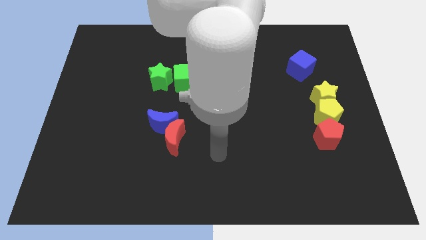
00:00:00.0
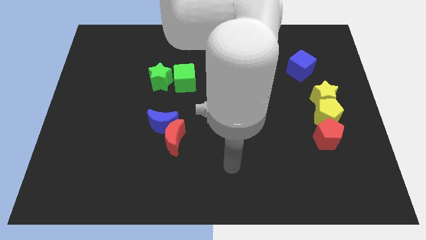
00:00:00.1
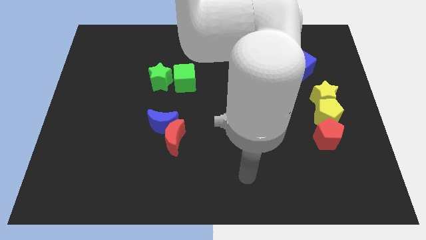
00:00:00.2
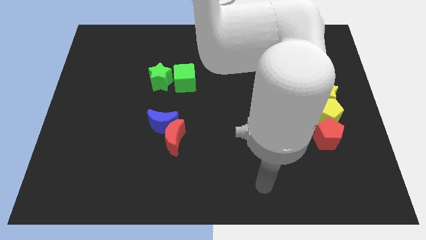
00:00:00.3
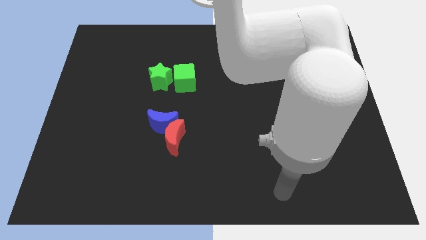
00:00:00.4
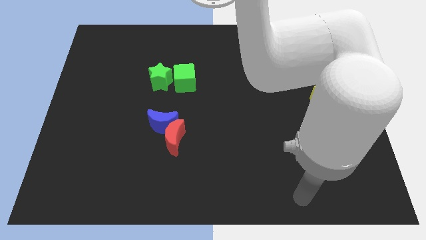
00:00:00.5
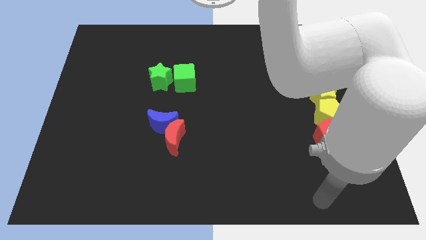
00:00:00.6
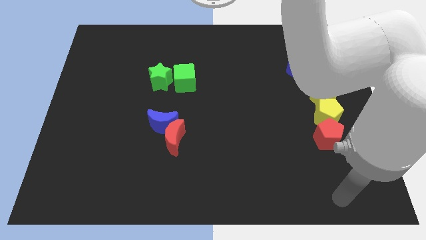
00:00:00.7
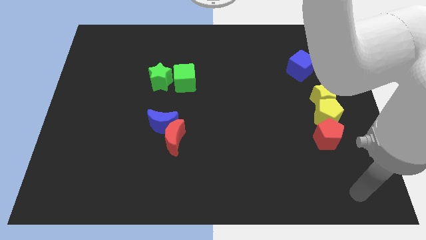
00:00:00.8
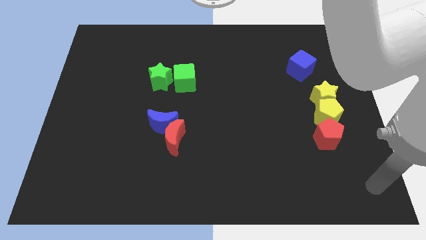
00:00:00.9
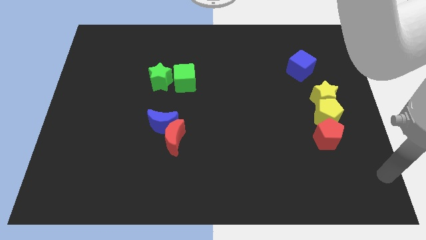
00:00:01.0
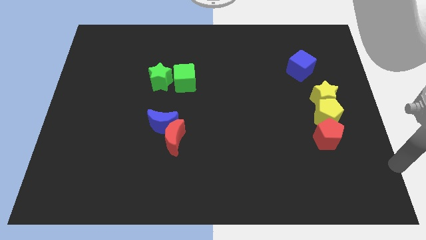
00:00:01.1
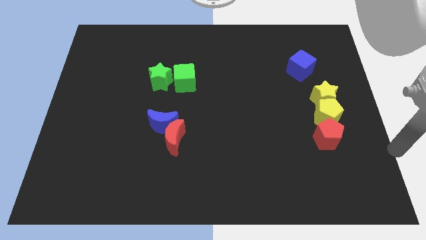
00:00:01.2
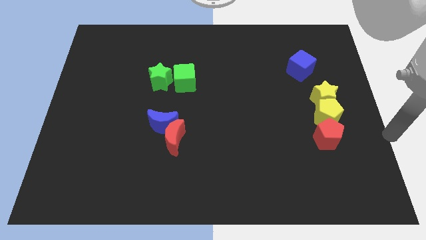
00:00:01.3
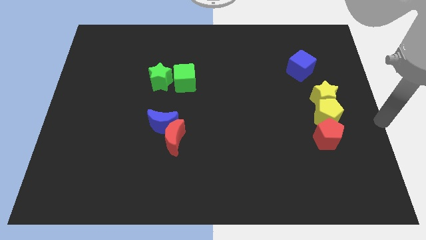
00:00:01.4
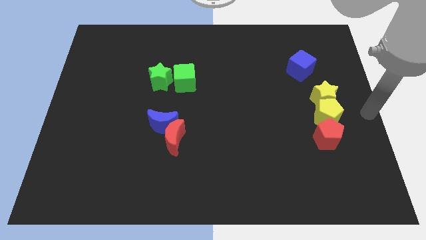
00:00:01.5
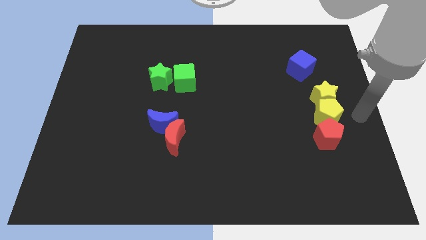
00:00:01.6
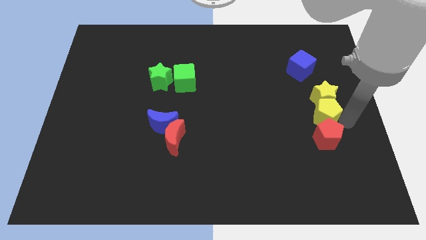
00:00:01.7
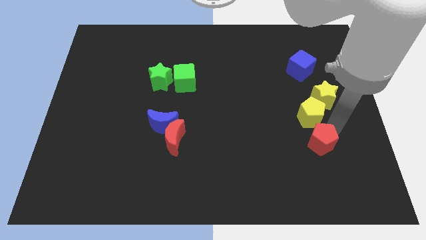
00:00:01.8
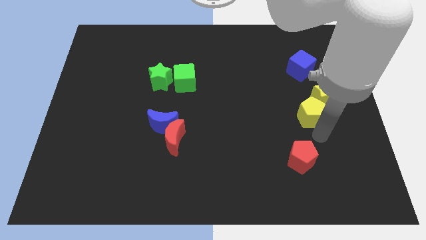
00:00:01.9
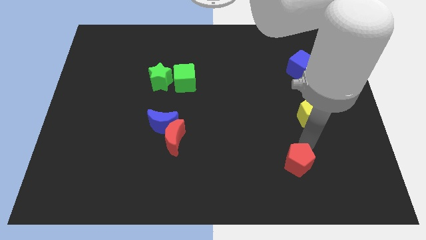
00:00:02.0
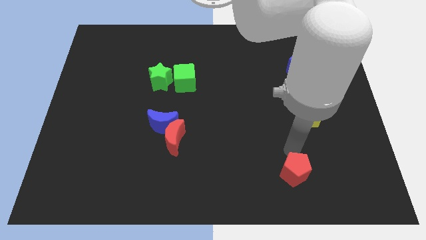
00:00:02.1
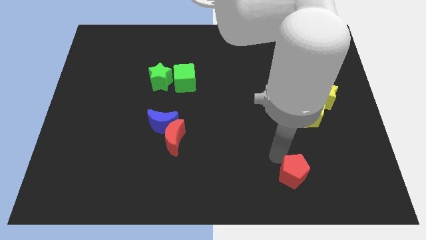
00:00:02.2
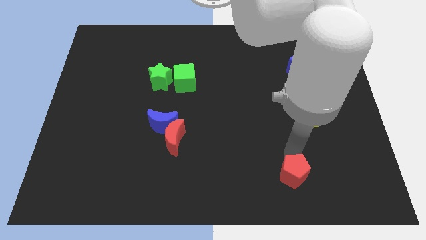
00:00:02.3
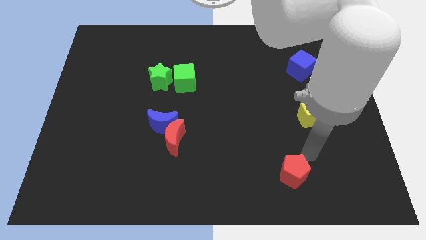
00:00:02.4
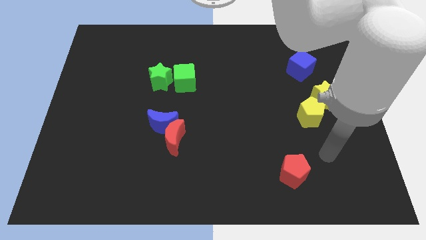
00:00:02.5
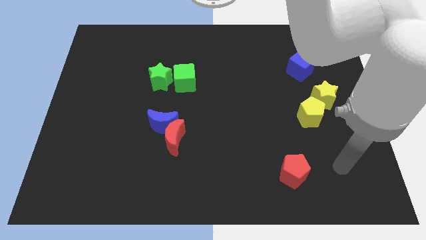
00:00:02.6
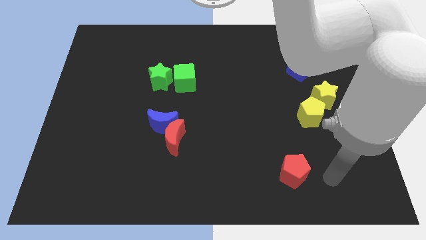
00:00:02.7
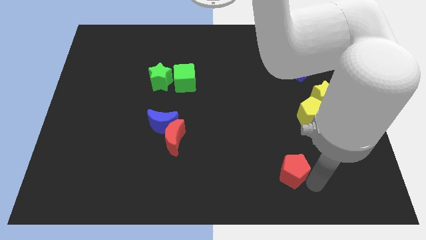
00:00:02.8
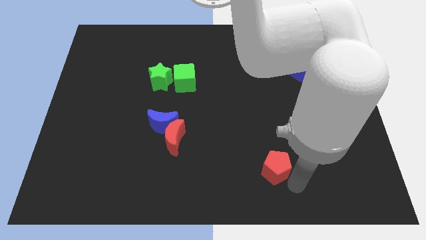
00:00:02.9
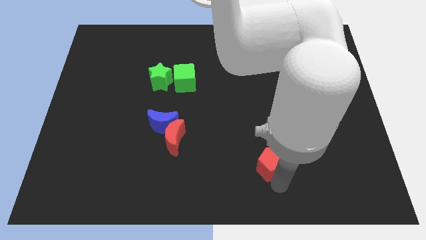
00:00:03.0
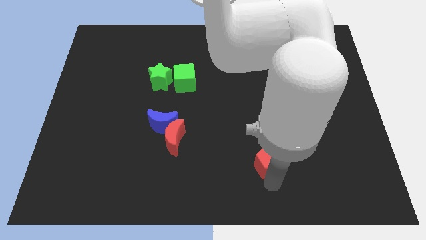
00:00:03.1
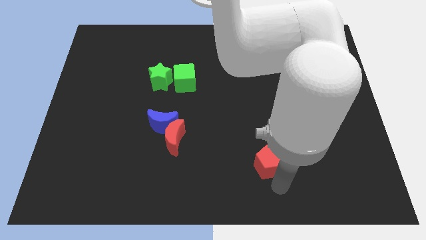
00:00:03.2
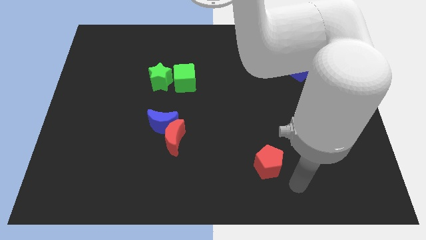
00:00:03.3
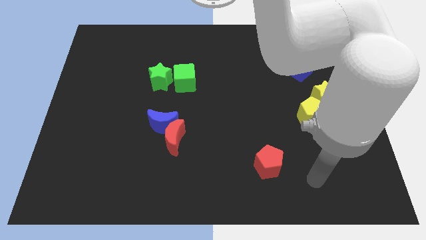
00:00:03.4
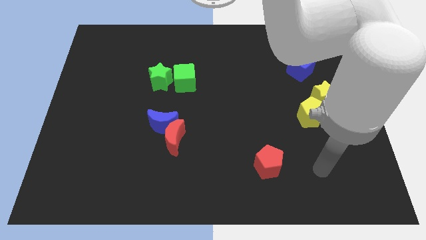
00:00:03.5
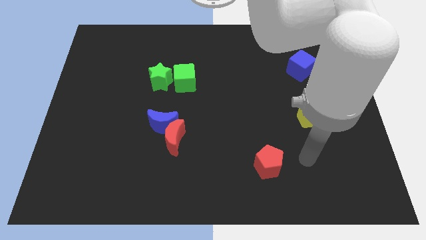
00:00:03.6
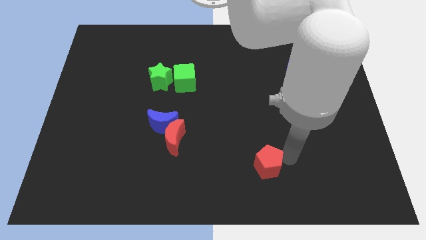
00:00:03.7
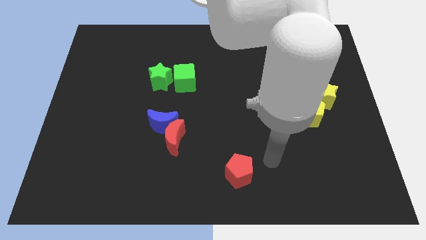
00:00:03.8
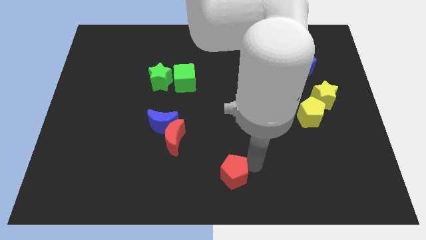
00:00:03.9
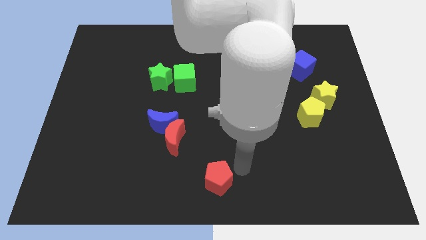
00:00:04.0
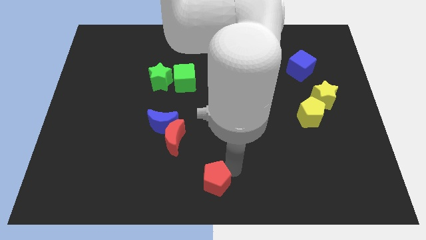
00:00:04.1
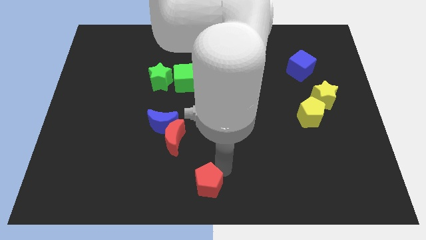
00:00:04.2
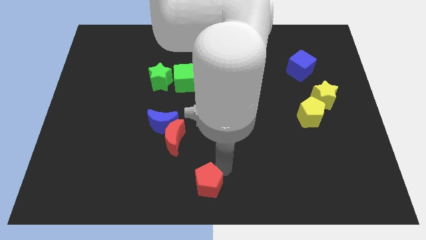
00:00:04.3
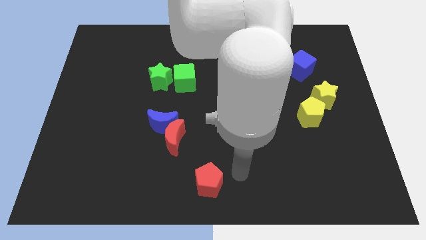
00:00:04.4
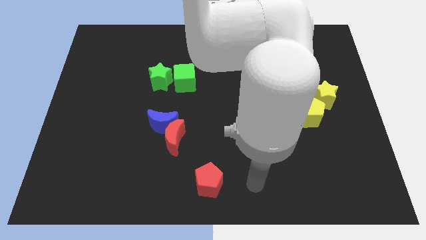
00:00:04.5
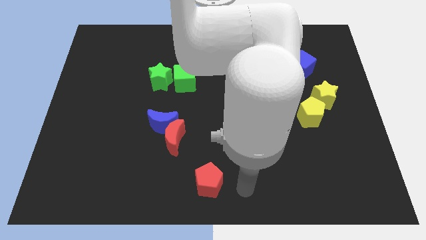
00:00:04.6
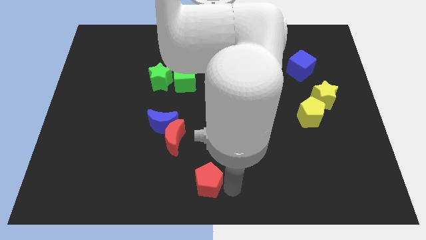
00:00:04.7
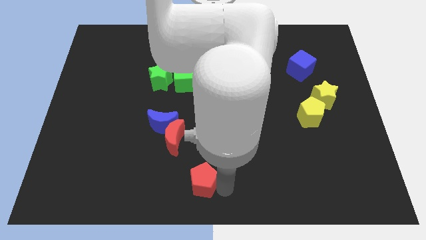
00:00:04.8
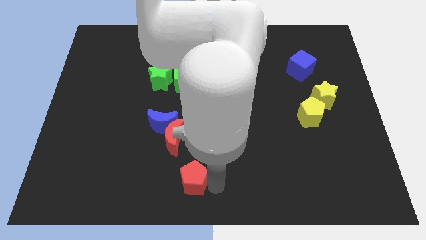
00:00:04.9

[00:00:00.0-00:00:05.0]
place the red pentagon to bottom center

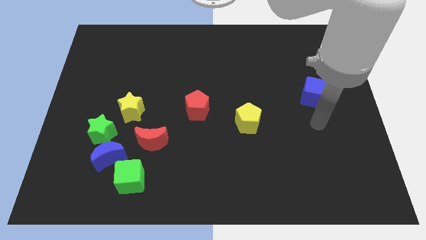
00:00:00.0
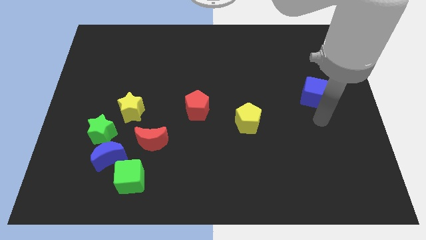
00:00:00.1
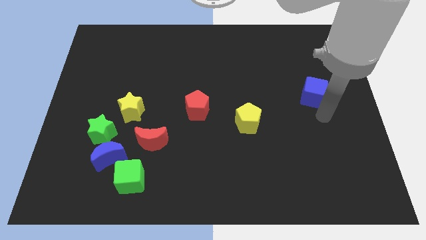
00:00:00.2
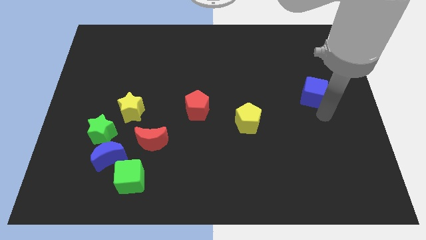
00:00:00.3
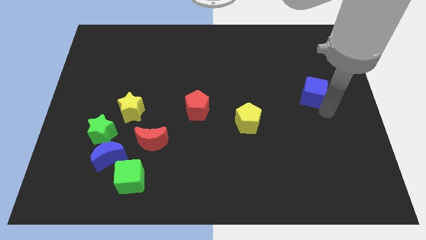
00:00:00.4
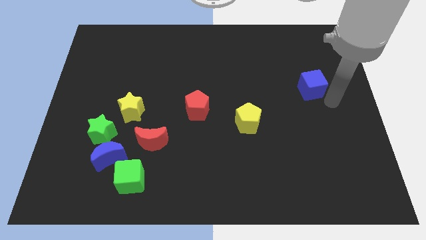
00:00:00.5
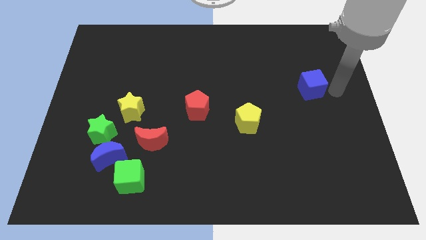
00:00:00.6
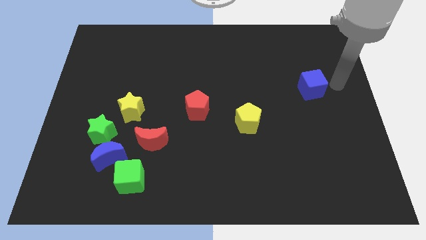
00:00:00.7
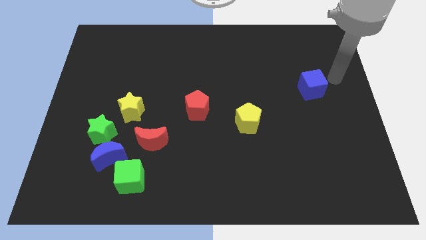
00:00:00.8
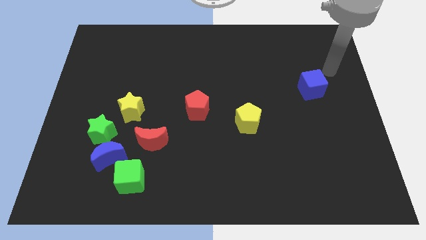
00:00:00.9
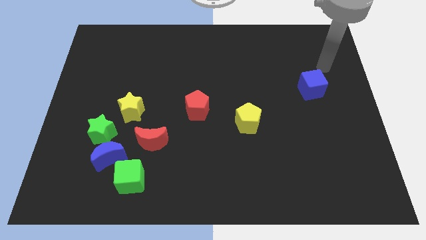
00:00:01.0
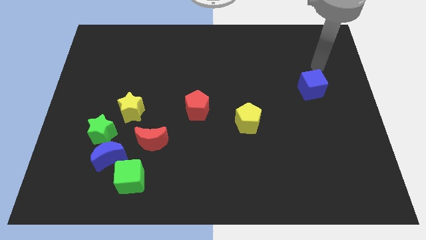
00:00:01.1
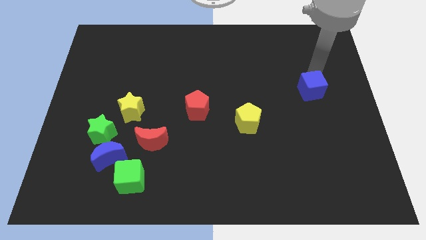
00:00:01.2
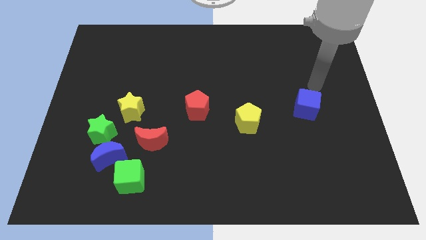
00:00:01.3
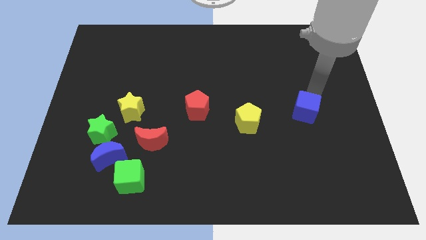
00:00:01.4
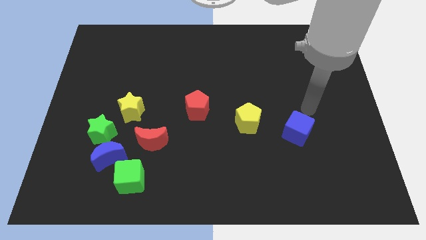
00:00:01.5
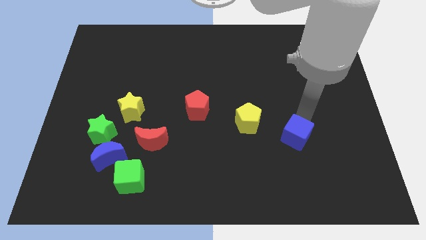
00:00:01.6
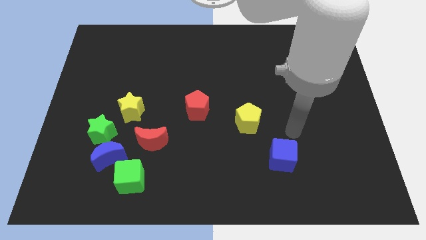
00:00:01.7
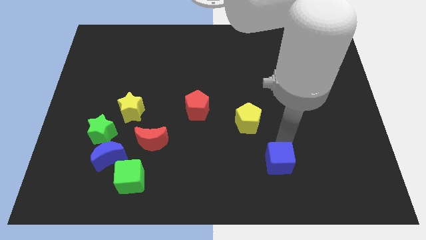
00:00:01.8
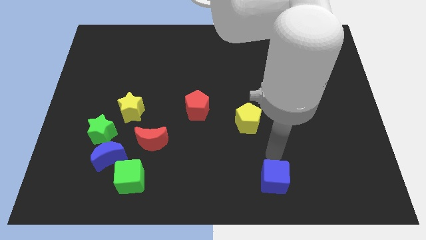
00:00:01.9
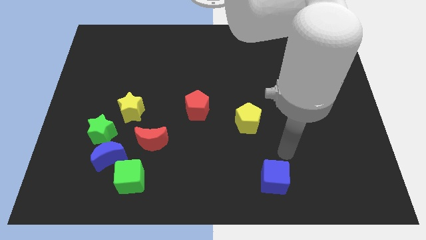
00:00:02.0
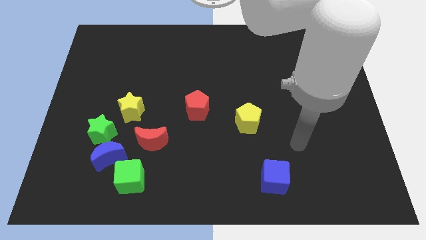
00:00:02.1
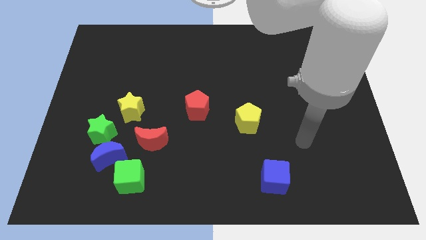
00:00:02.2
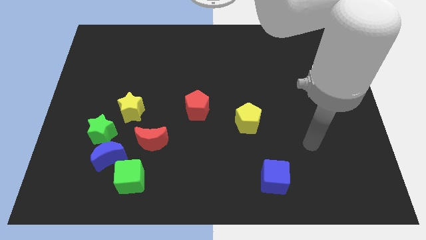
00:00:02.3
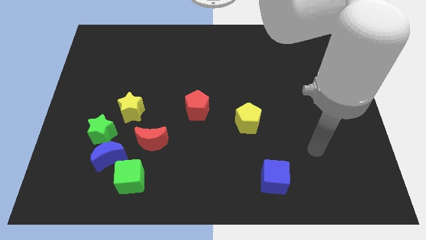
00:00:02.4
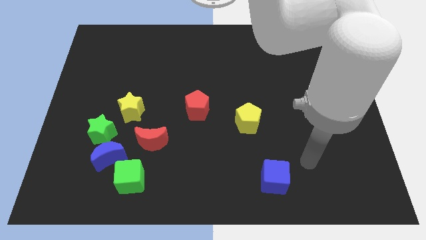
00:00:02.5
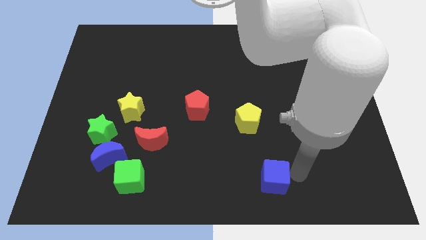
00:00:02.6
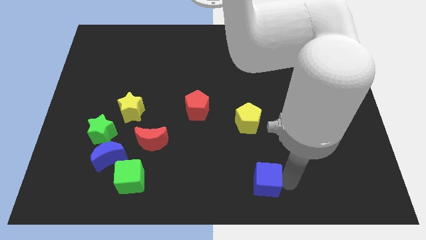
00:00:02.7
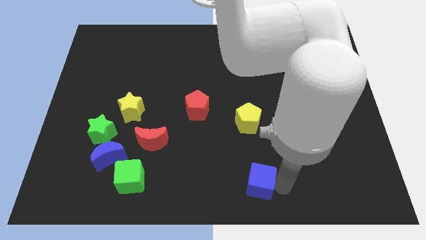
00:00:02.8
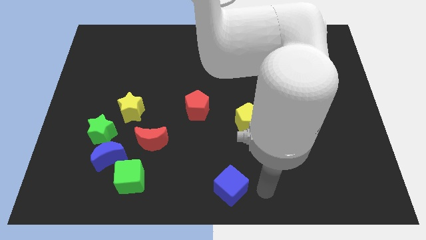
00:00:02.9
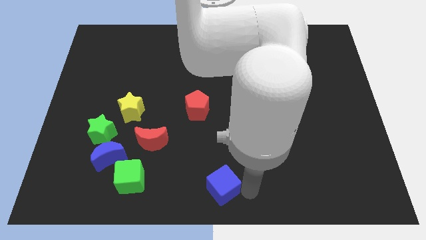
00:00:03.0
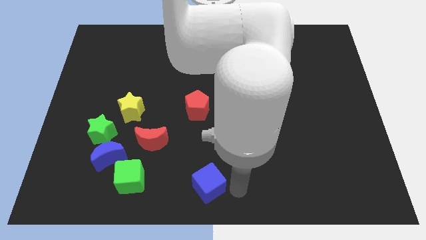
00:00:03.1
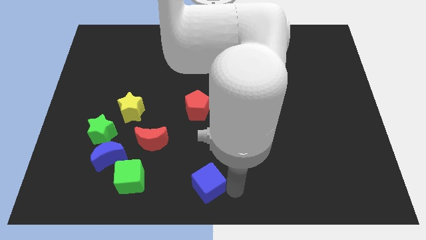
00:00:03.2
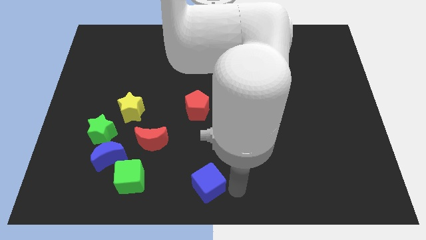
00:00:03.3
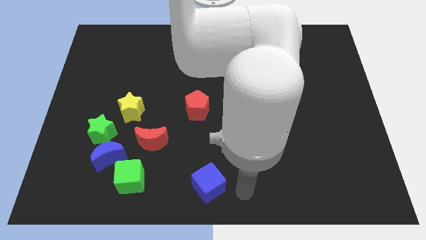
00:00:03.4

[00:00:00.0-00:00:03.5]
slide the blue cube parallel to the right of the green cube

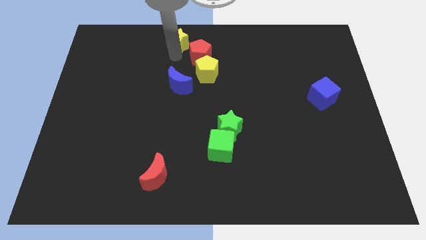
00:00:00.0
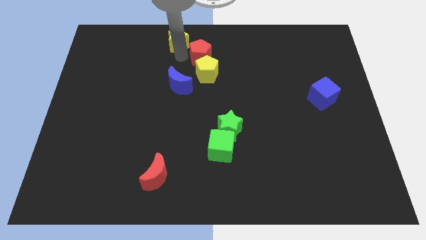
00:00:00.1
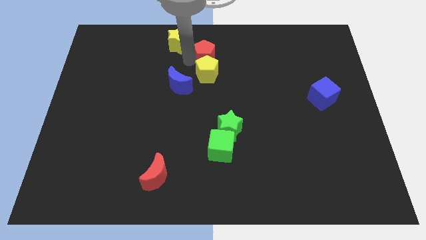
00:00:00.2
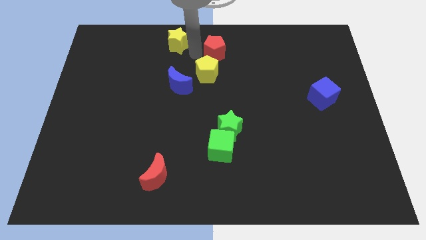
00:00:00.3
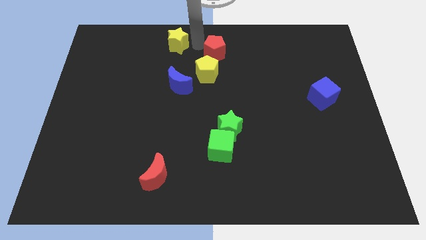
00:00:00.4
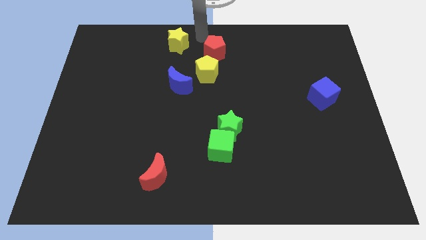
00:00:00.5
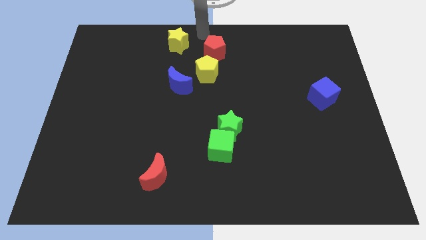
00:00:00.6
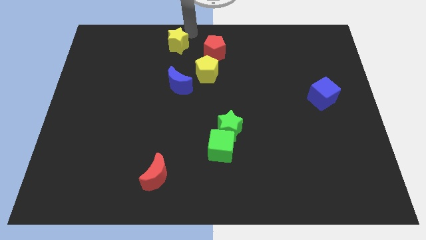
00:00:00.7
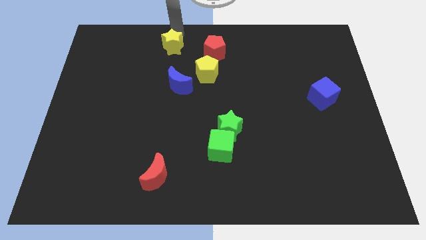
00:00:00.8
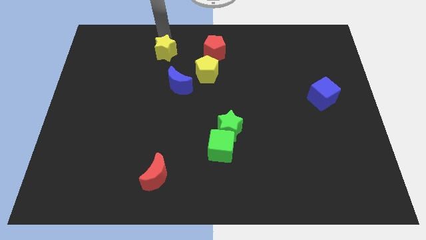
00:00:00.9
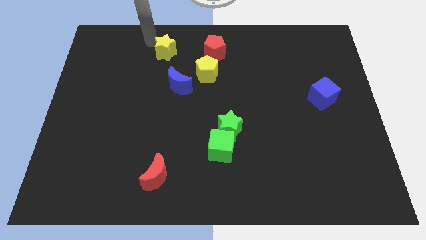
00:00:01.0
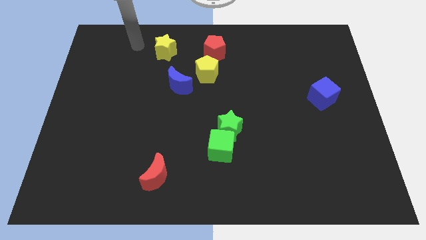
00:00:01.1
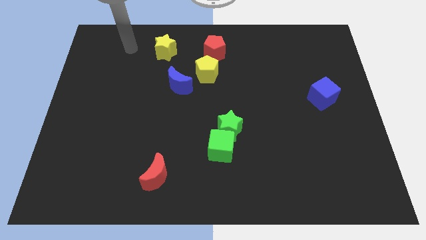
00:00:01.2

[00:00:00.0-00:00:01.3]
put the yellow star to the left side of the red pentagon
